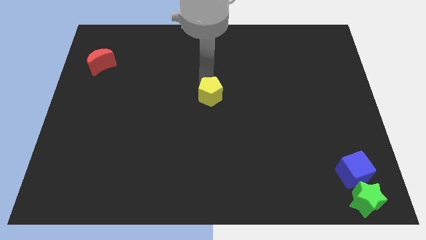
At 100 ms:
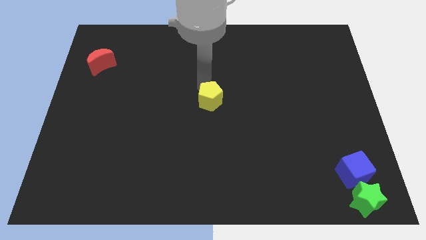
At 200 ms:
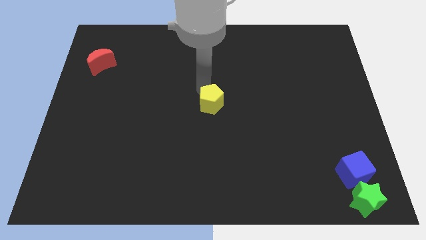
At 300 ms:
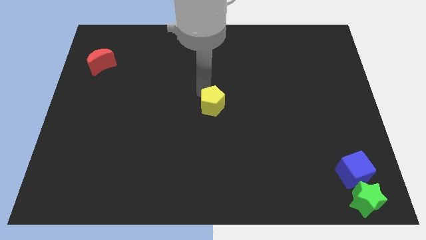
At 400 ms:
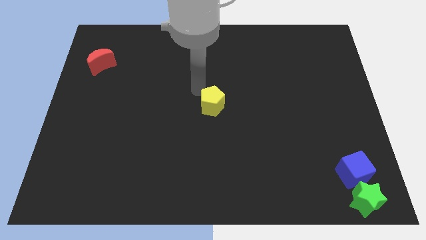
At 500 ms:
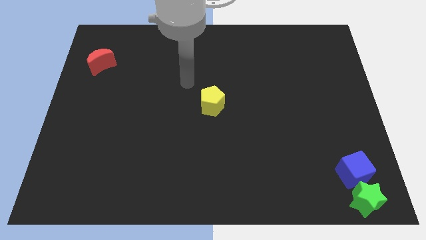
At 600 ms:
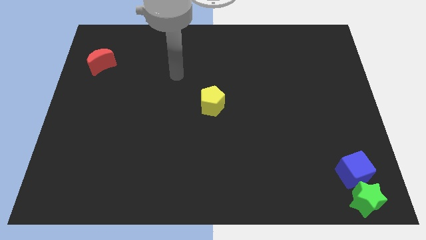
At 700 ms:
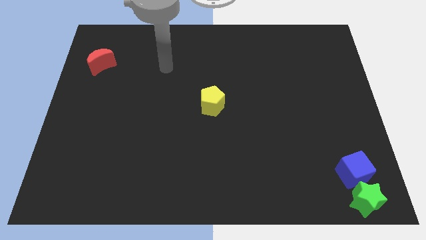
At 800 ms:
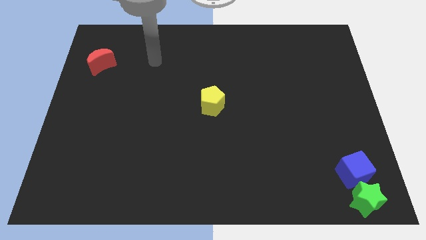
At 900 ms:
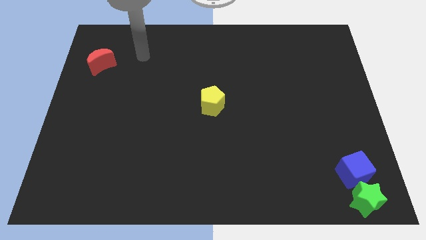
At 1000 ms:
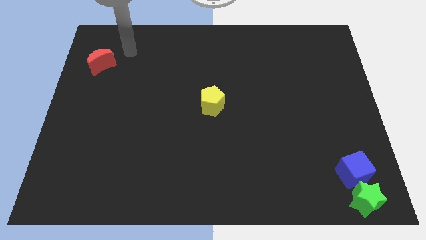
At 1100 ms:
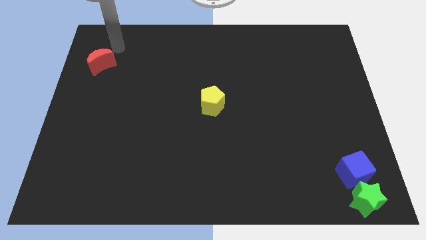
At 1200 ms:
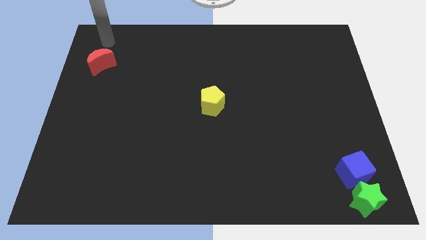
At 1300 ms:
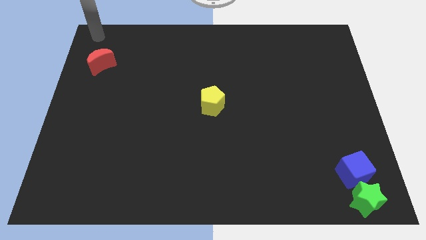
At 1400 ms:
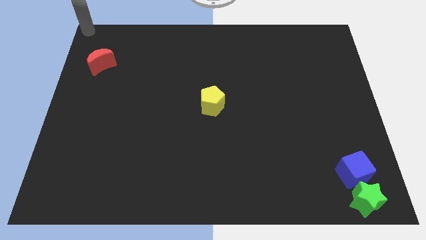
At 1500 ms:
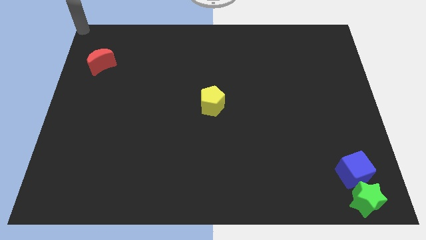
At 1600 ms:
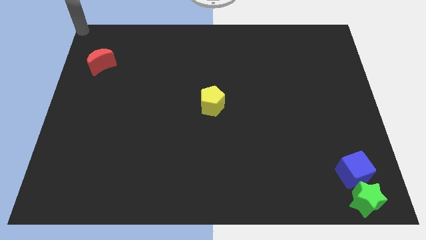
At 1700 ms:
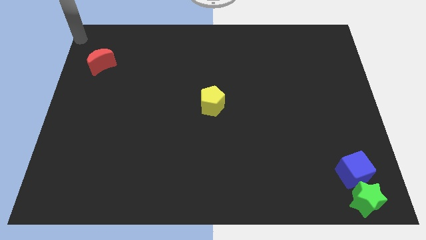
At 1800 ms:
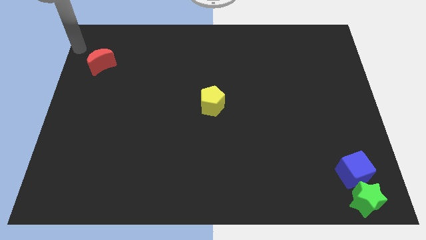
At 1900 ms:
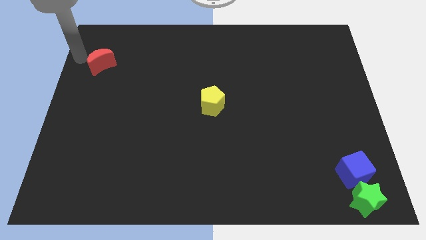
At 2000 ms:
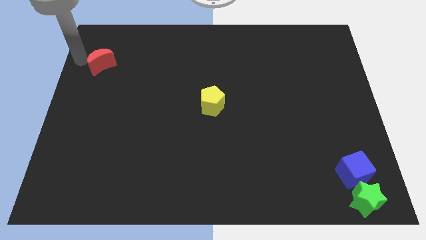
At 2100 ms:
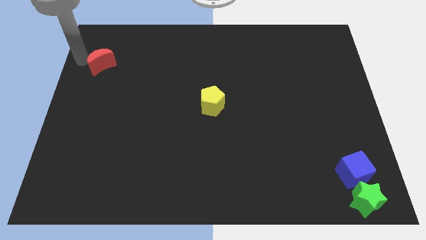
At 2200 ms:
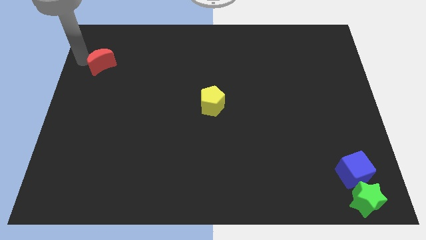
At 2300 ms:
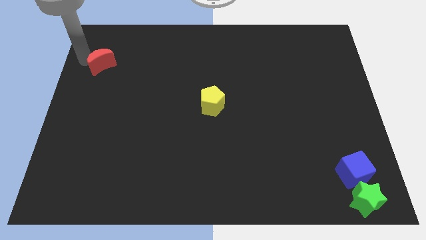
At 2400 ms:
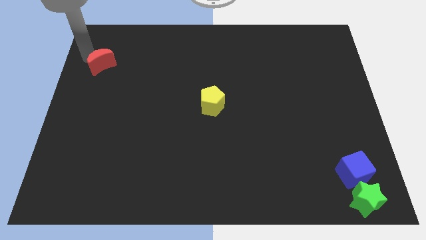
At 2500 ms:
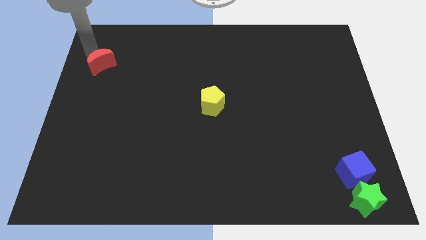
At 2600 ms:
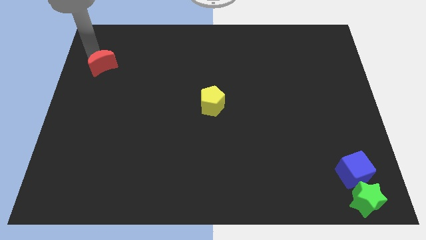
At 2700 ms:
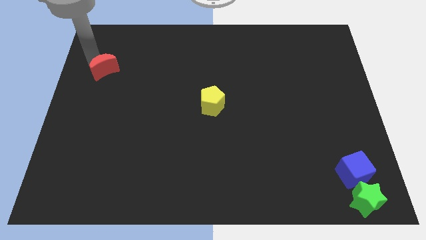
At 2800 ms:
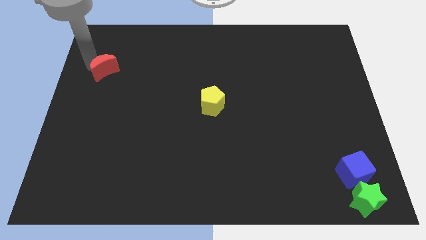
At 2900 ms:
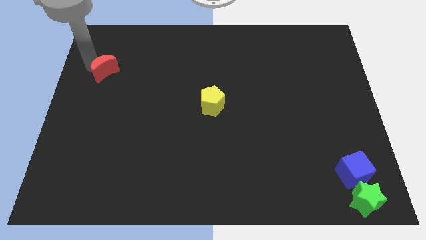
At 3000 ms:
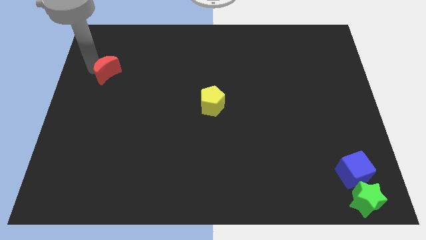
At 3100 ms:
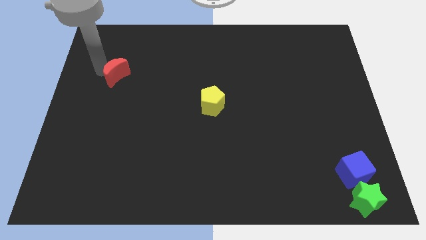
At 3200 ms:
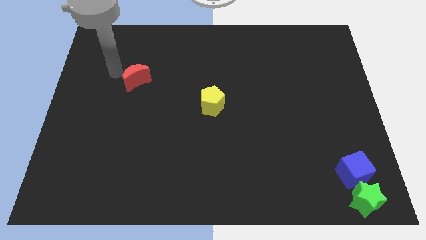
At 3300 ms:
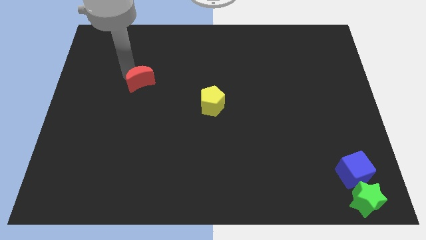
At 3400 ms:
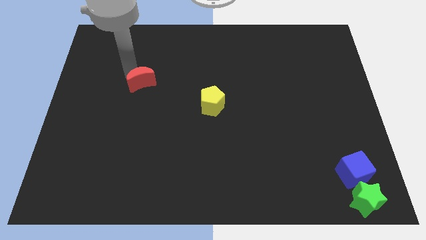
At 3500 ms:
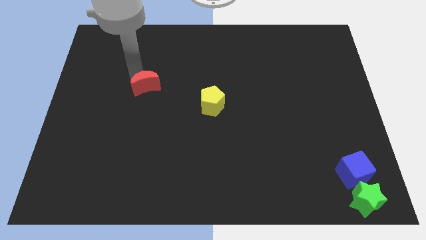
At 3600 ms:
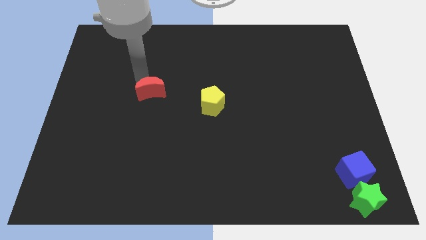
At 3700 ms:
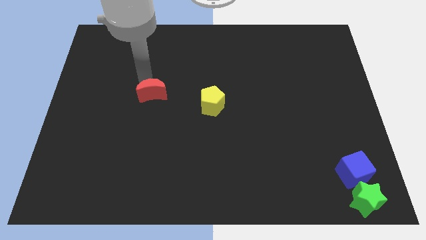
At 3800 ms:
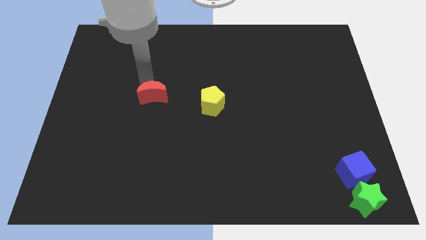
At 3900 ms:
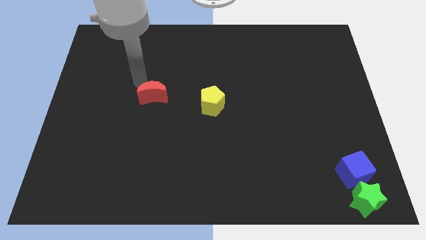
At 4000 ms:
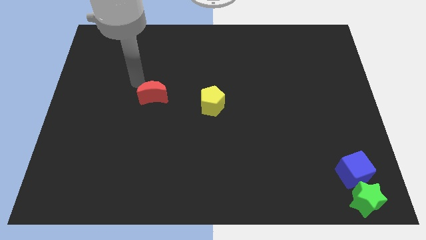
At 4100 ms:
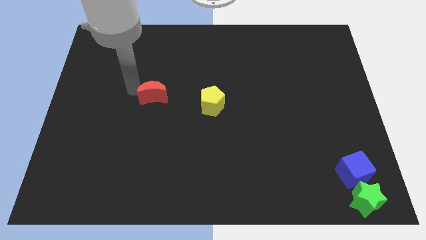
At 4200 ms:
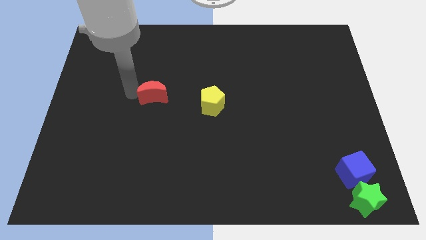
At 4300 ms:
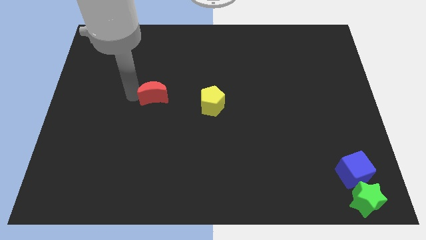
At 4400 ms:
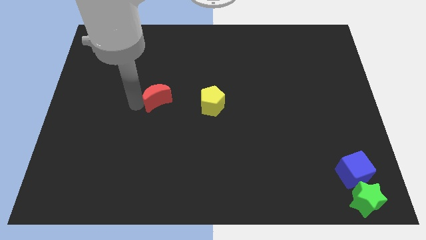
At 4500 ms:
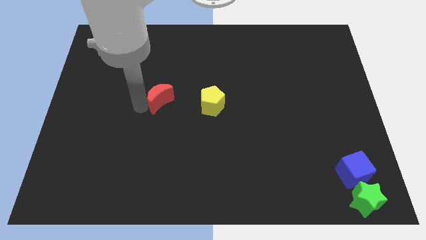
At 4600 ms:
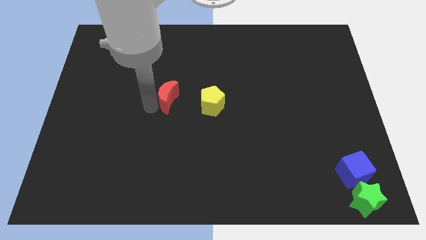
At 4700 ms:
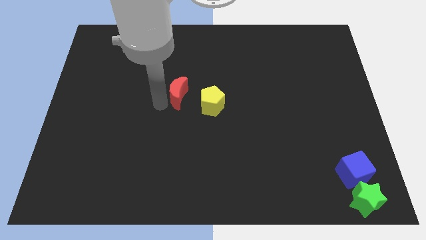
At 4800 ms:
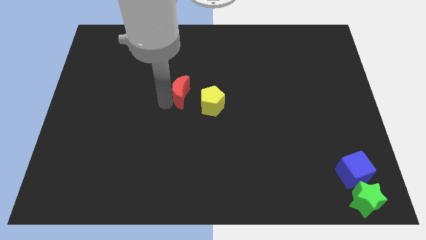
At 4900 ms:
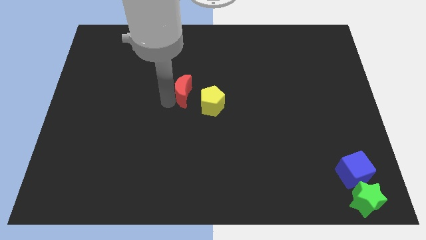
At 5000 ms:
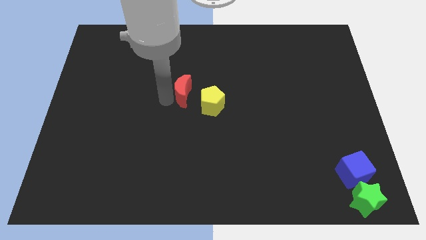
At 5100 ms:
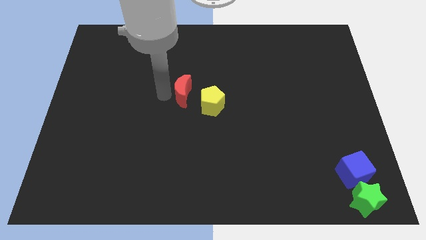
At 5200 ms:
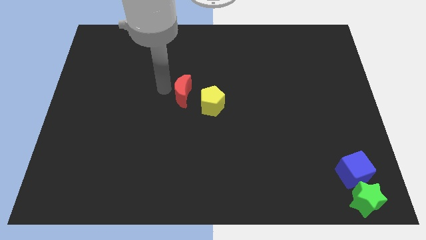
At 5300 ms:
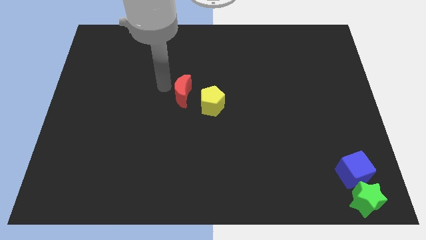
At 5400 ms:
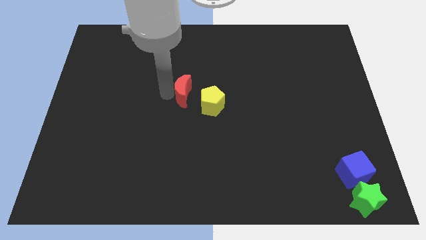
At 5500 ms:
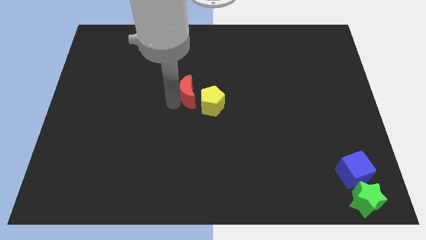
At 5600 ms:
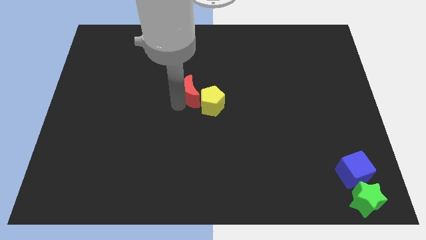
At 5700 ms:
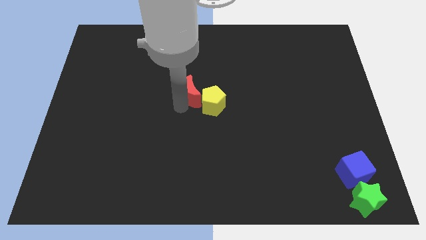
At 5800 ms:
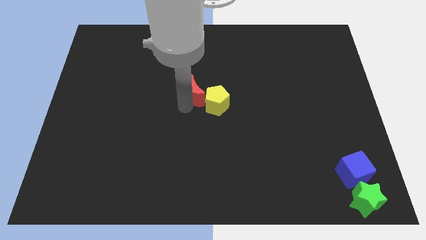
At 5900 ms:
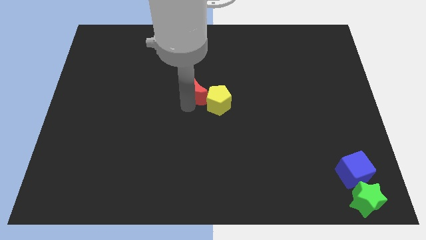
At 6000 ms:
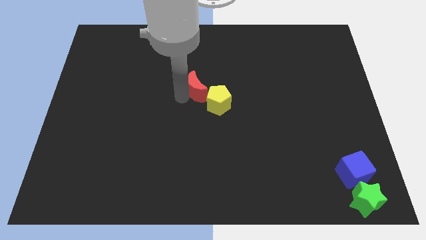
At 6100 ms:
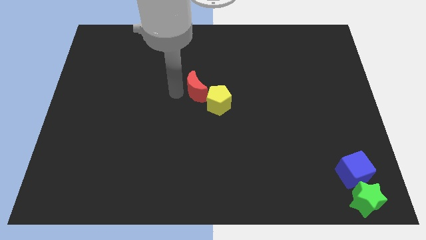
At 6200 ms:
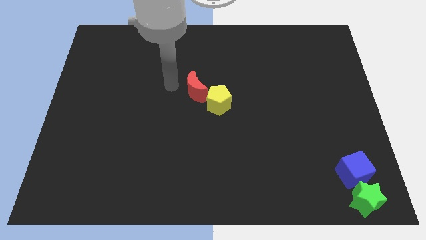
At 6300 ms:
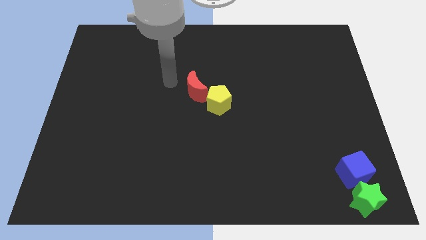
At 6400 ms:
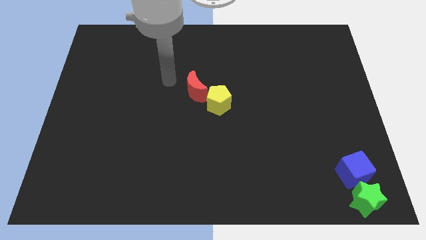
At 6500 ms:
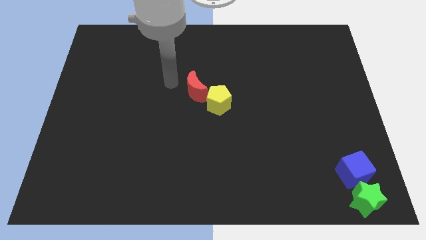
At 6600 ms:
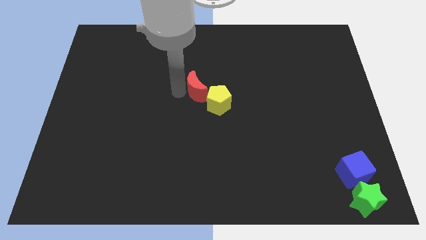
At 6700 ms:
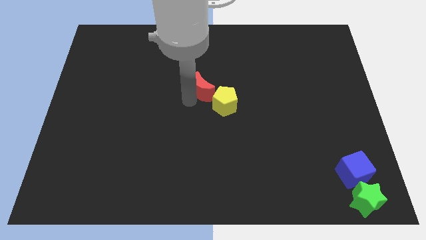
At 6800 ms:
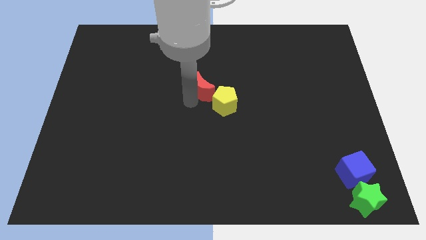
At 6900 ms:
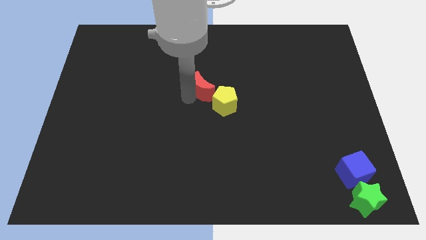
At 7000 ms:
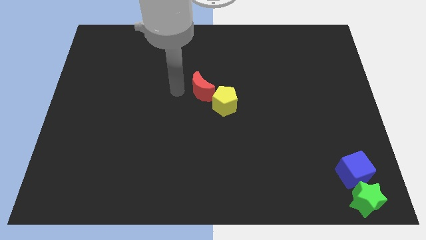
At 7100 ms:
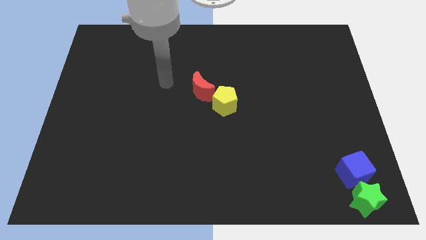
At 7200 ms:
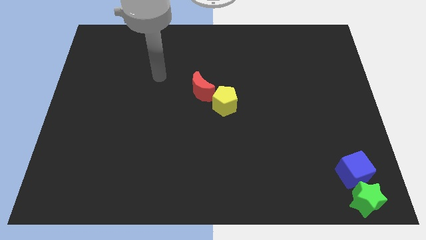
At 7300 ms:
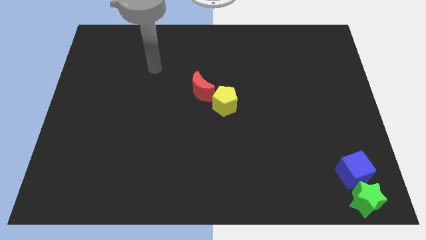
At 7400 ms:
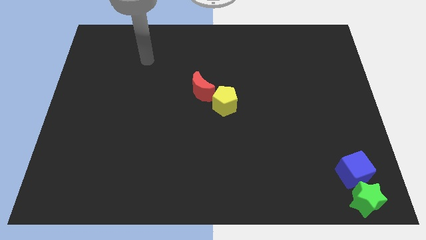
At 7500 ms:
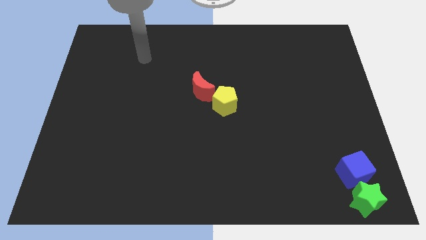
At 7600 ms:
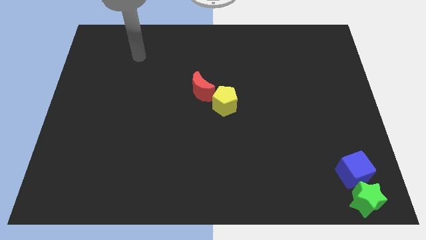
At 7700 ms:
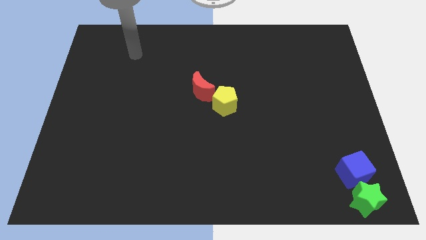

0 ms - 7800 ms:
put the yellow pentagon and red moon at the center of the board

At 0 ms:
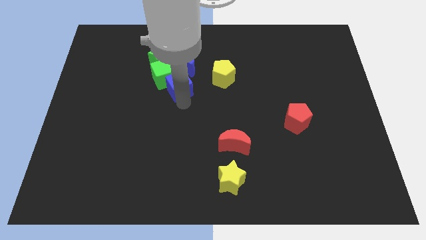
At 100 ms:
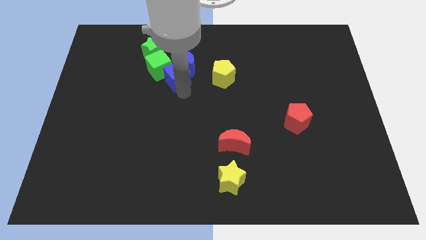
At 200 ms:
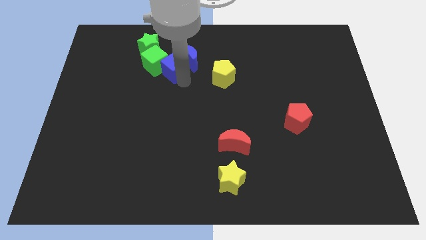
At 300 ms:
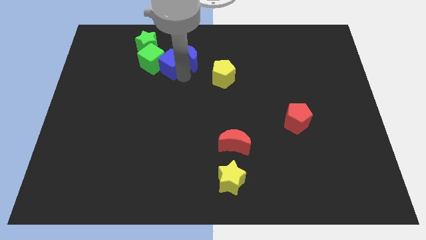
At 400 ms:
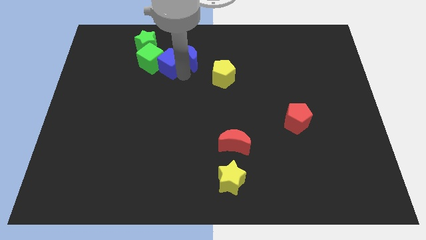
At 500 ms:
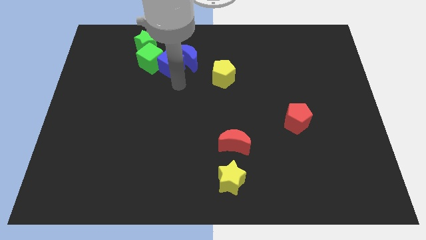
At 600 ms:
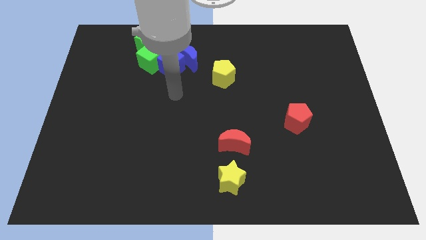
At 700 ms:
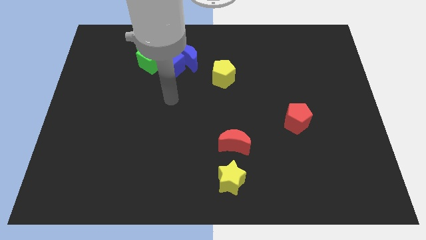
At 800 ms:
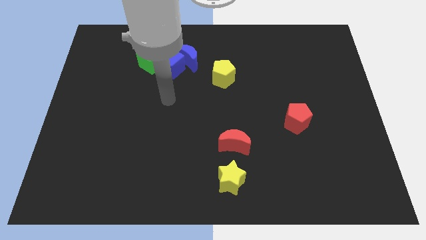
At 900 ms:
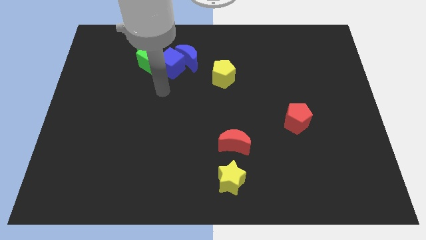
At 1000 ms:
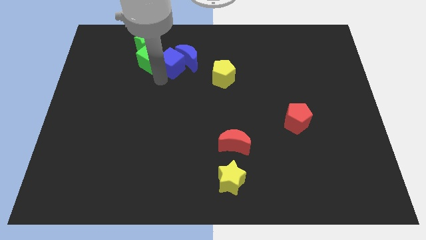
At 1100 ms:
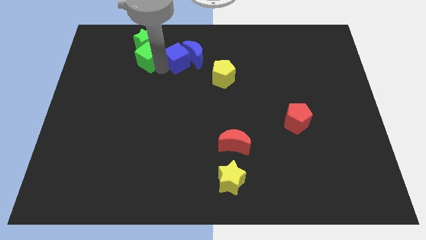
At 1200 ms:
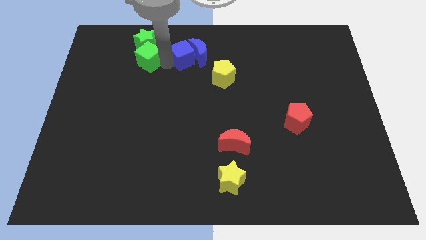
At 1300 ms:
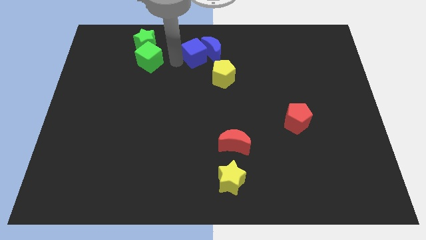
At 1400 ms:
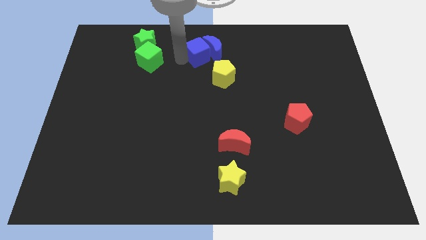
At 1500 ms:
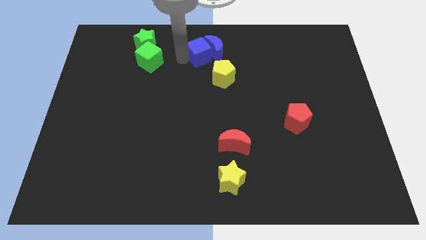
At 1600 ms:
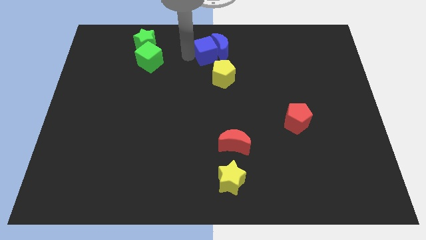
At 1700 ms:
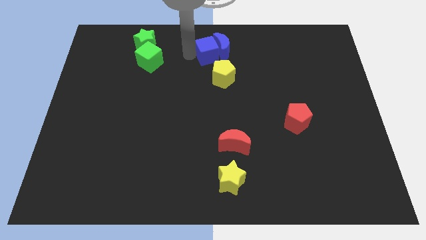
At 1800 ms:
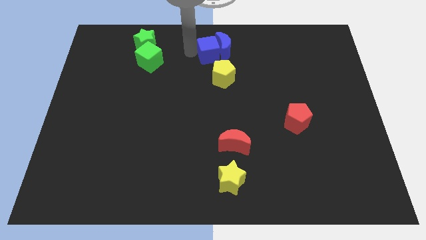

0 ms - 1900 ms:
move the blue cube into the blue moon
